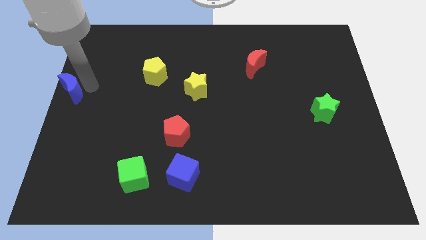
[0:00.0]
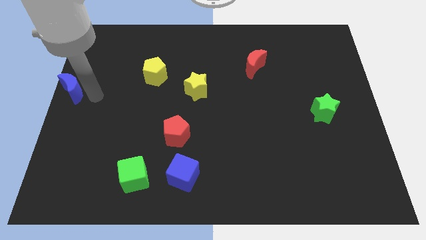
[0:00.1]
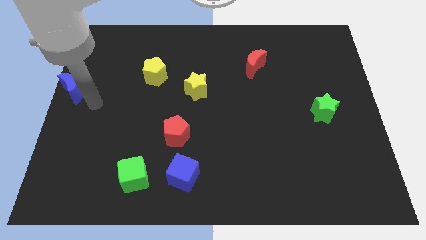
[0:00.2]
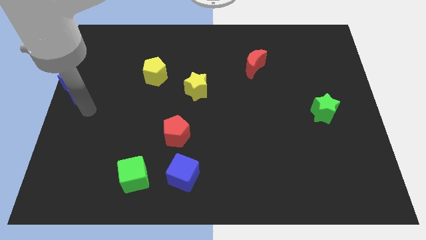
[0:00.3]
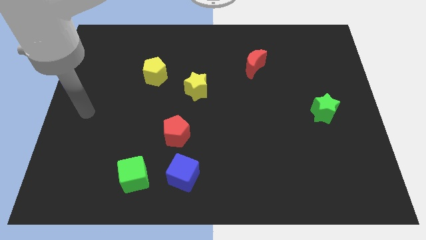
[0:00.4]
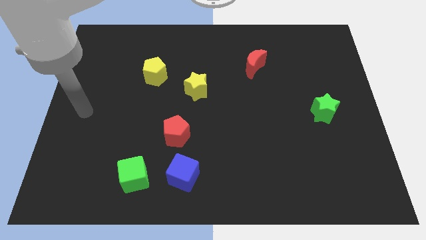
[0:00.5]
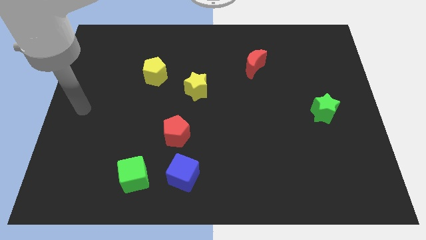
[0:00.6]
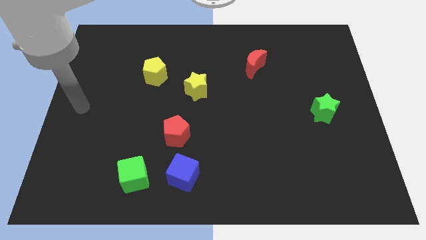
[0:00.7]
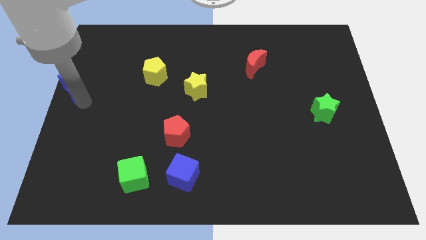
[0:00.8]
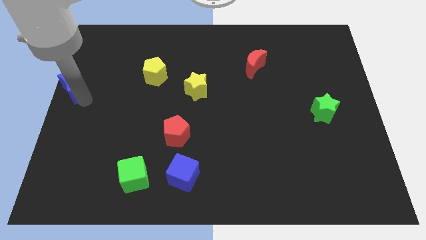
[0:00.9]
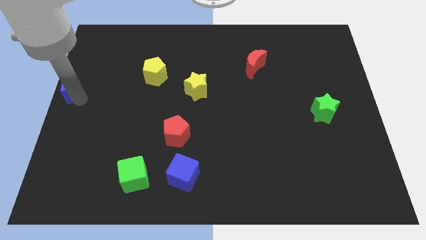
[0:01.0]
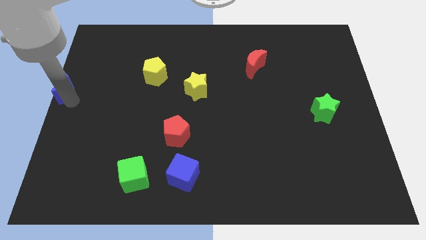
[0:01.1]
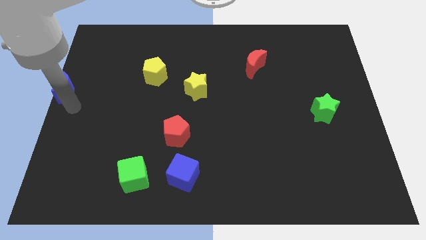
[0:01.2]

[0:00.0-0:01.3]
push blue moon close to the left center

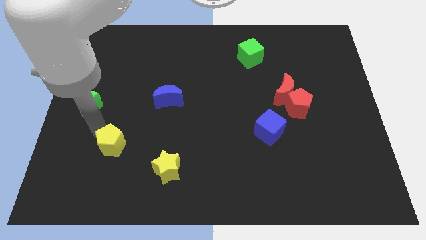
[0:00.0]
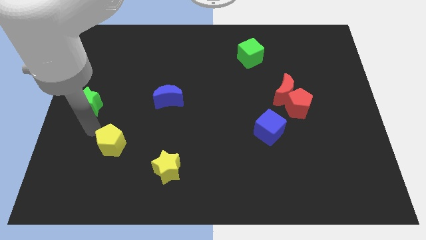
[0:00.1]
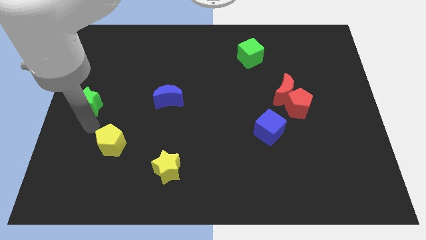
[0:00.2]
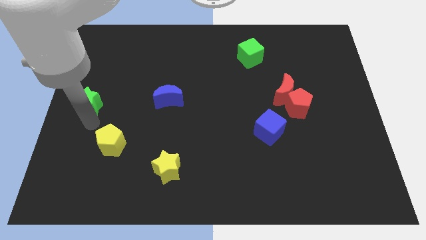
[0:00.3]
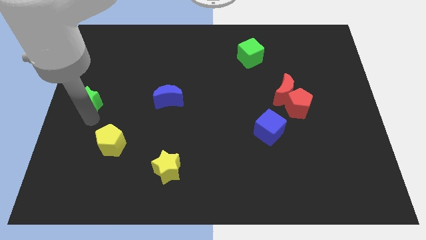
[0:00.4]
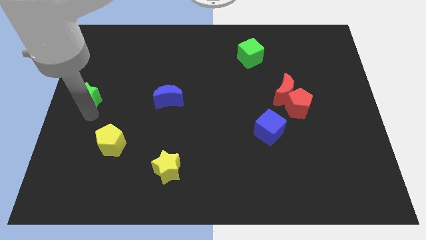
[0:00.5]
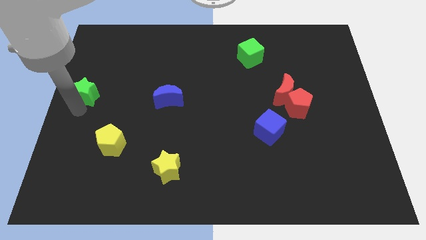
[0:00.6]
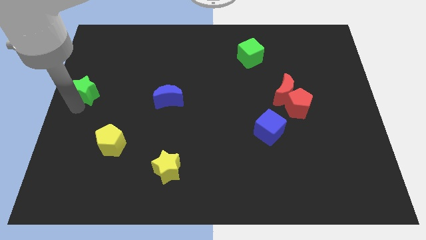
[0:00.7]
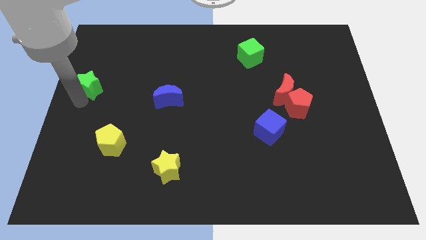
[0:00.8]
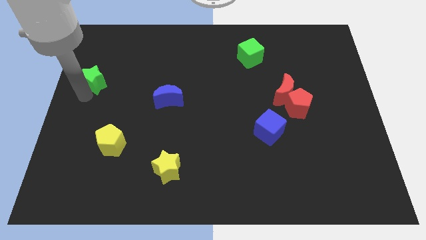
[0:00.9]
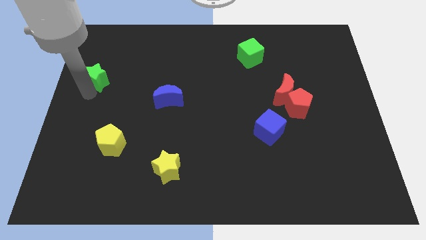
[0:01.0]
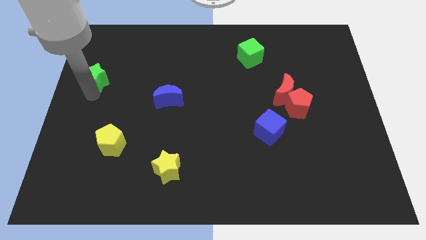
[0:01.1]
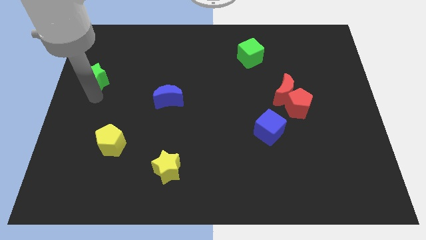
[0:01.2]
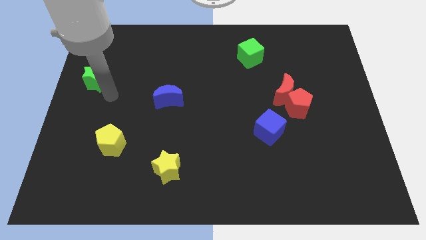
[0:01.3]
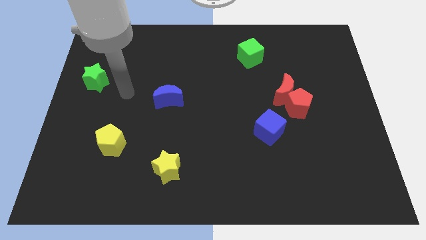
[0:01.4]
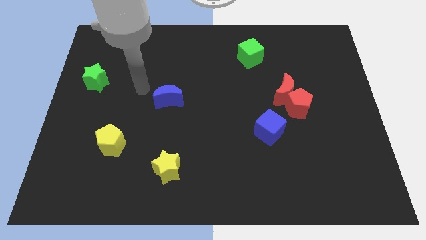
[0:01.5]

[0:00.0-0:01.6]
move the green star up slightly

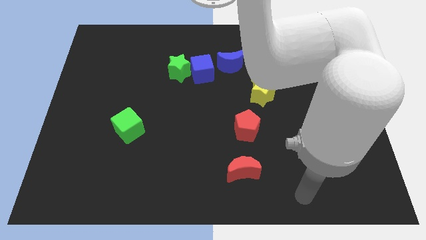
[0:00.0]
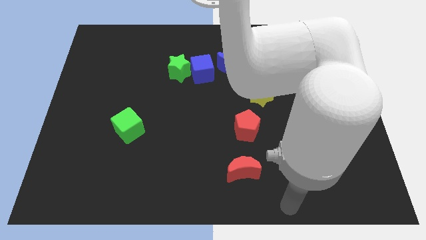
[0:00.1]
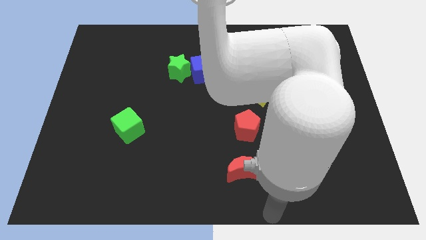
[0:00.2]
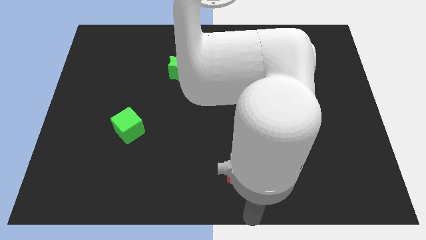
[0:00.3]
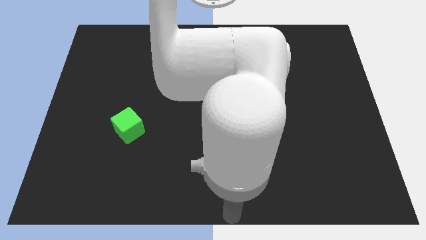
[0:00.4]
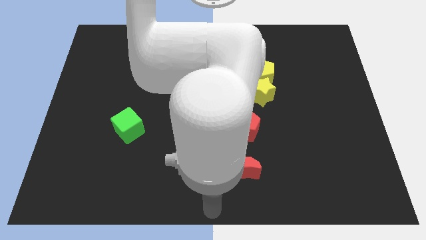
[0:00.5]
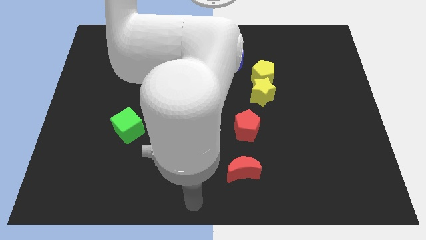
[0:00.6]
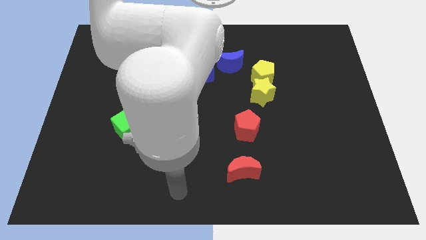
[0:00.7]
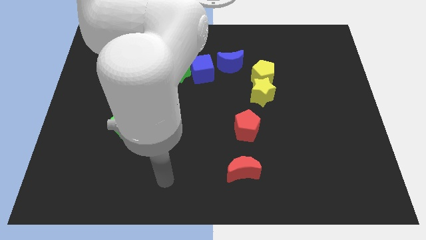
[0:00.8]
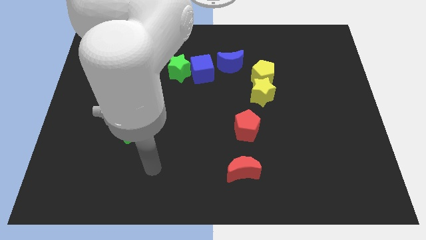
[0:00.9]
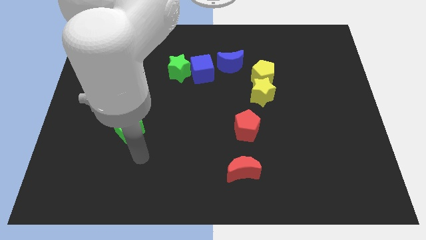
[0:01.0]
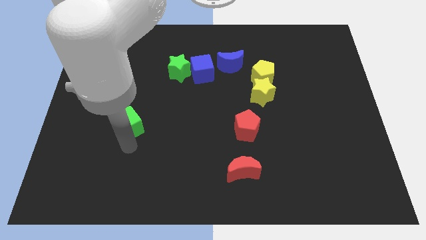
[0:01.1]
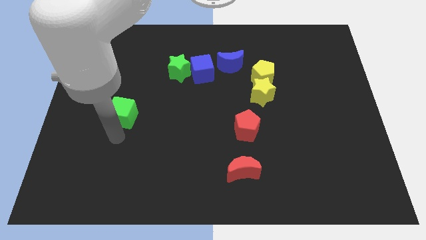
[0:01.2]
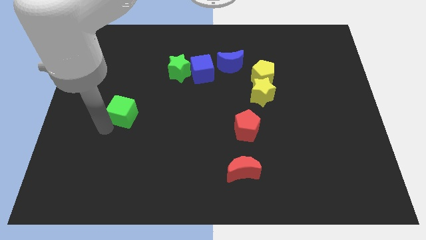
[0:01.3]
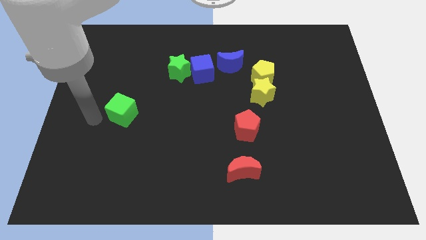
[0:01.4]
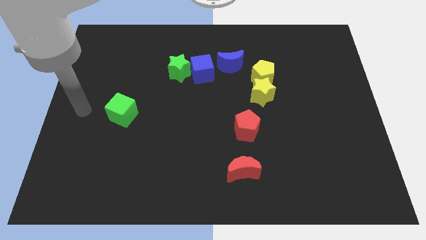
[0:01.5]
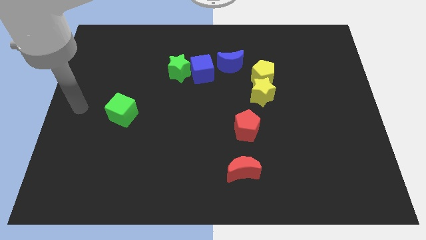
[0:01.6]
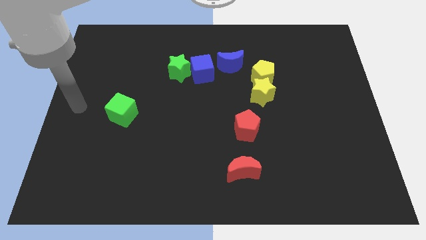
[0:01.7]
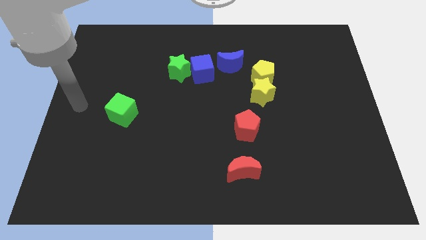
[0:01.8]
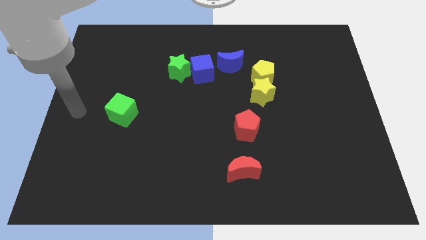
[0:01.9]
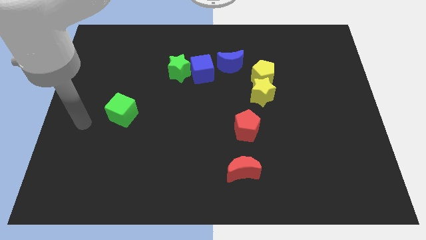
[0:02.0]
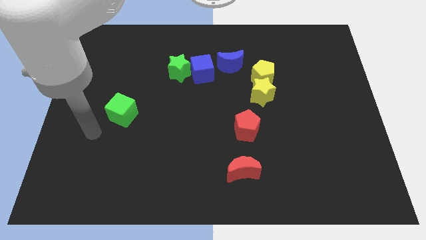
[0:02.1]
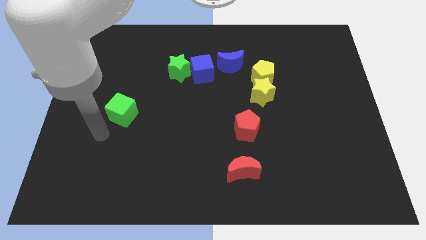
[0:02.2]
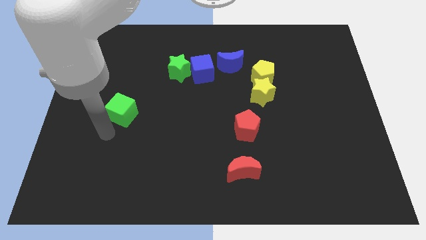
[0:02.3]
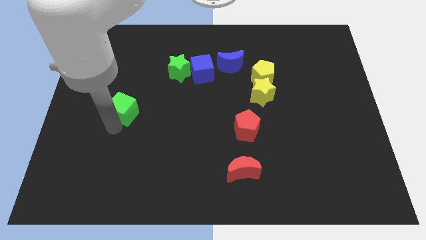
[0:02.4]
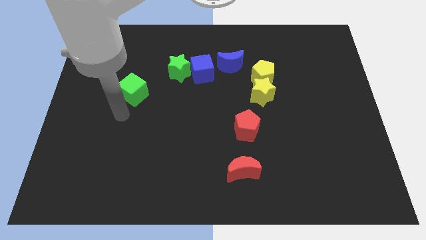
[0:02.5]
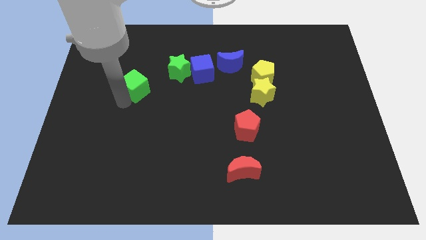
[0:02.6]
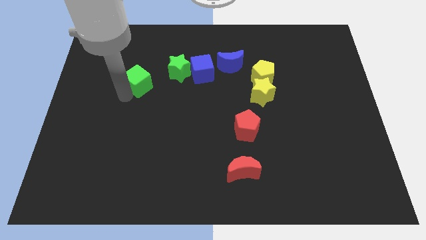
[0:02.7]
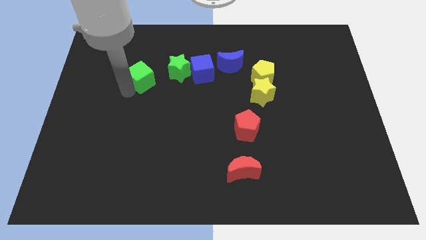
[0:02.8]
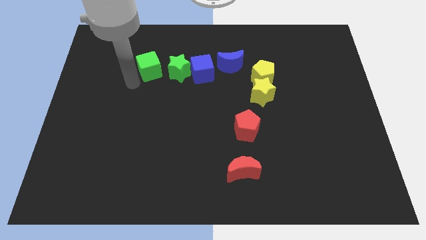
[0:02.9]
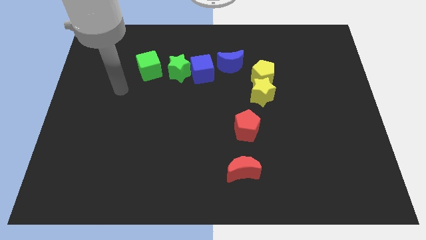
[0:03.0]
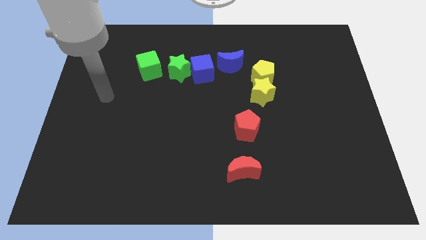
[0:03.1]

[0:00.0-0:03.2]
push the green cube left to the green star

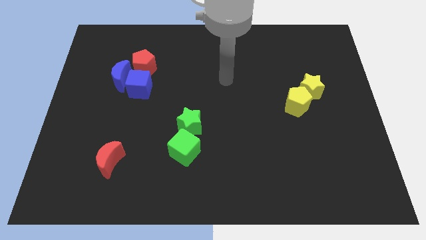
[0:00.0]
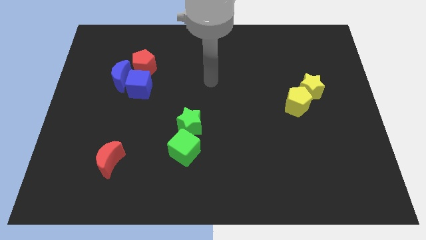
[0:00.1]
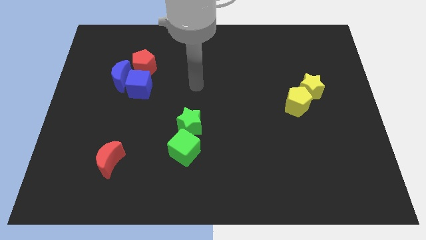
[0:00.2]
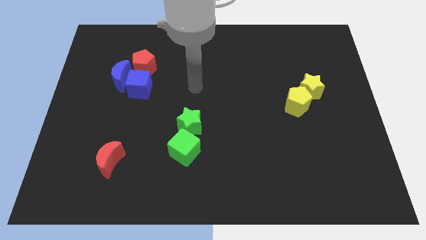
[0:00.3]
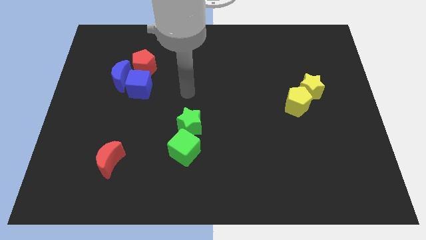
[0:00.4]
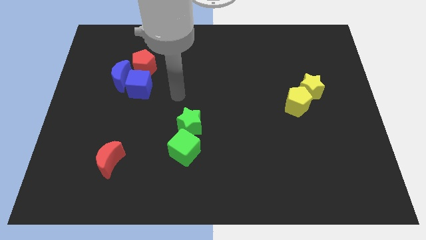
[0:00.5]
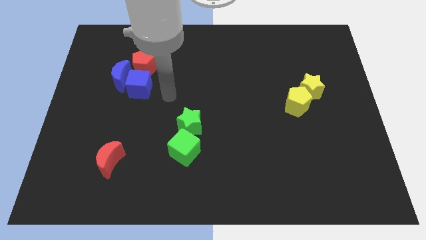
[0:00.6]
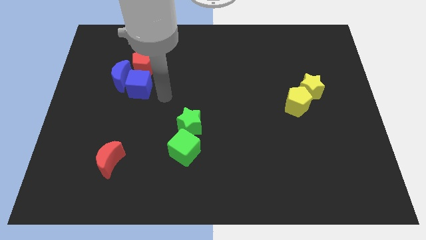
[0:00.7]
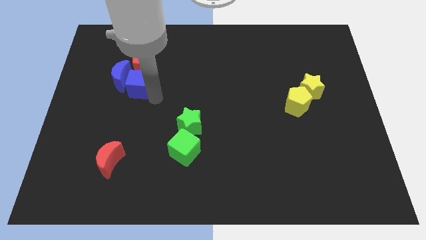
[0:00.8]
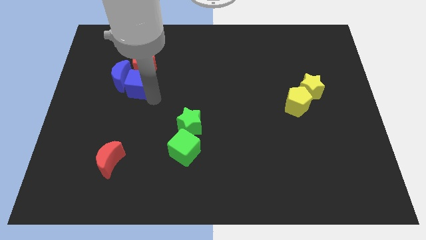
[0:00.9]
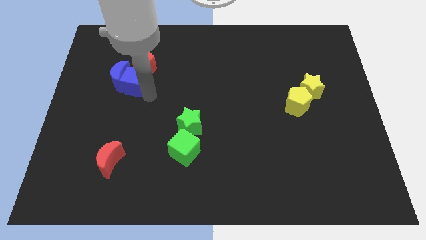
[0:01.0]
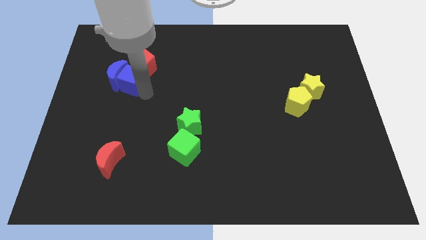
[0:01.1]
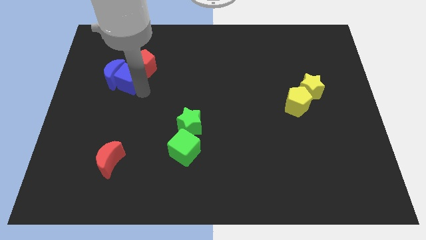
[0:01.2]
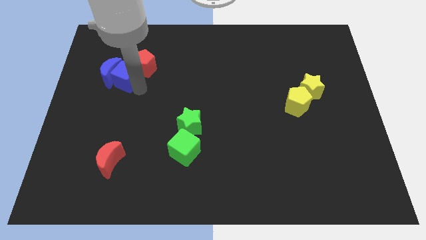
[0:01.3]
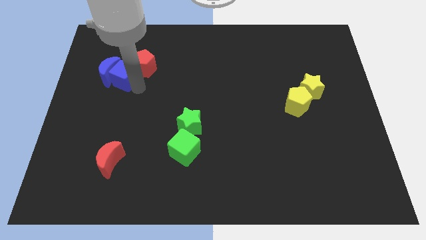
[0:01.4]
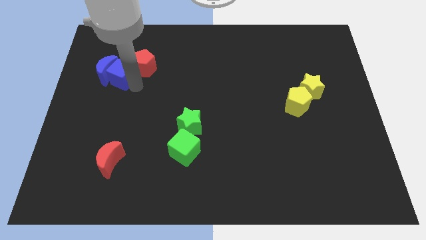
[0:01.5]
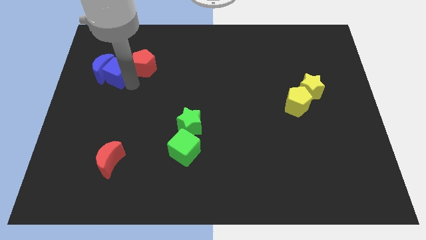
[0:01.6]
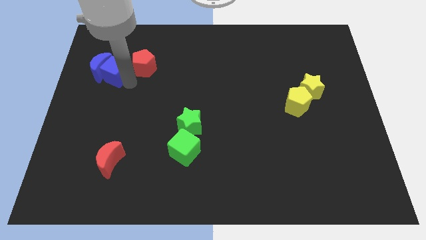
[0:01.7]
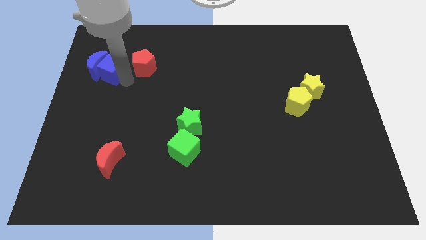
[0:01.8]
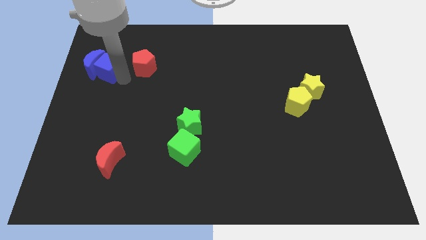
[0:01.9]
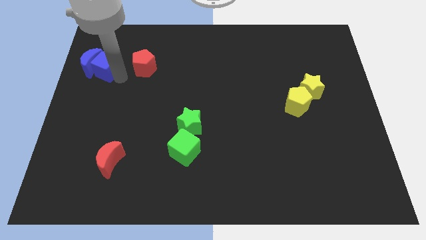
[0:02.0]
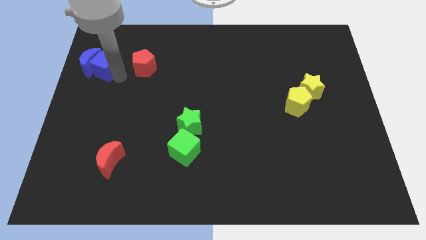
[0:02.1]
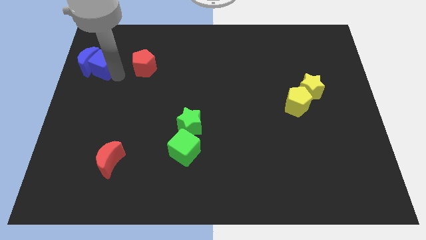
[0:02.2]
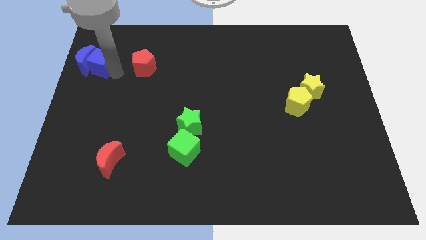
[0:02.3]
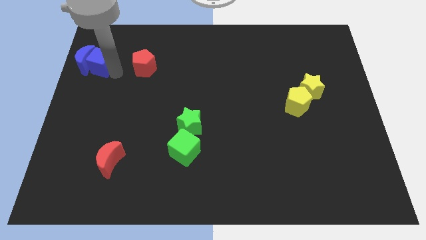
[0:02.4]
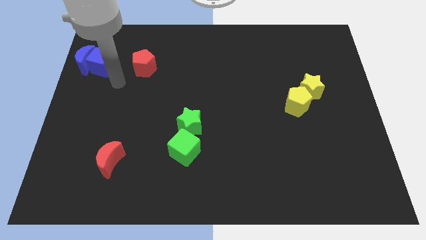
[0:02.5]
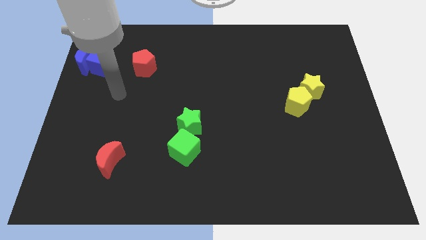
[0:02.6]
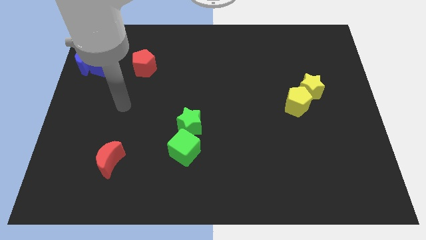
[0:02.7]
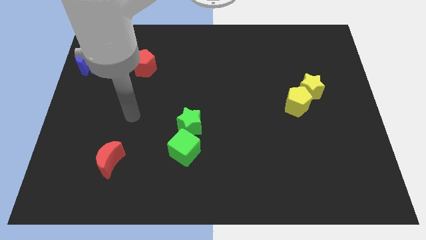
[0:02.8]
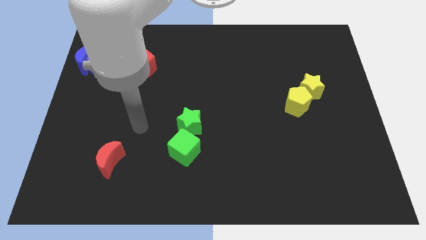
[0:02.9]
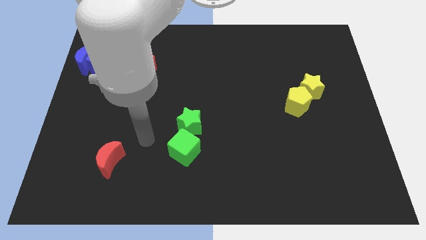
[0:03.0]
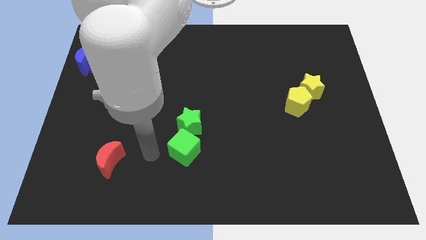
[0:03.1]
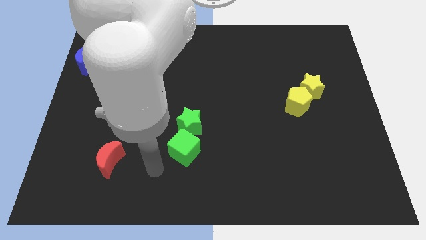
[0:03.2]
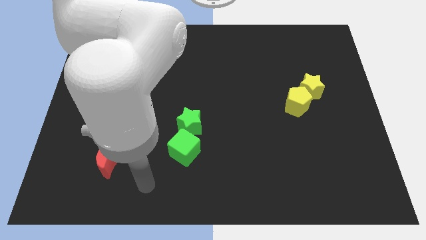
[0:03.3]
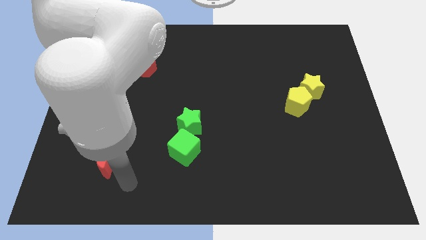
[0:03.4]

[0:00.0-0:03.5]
push the blue cube into the blue crescent
